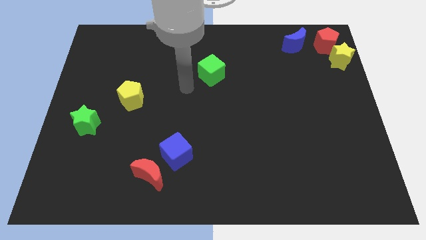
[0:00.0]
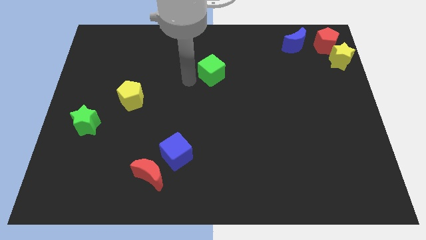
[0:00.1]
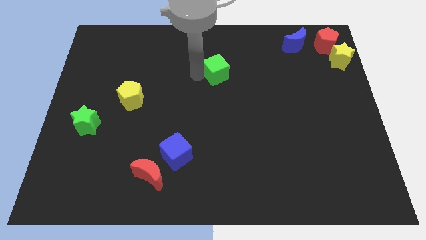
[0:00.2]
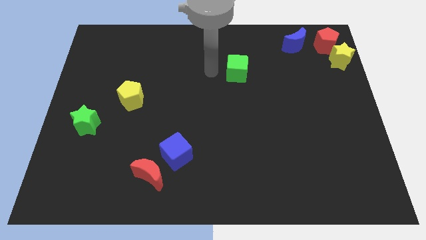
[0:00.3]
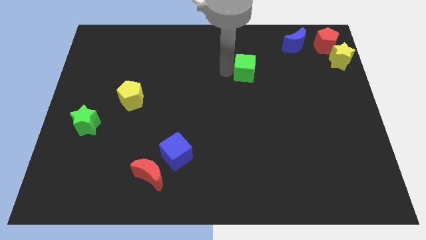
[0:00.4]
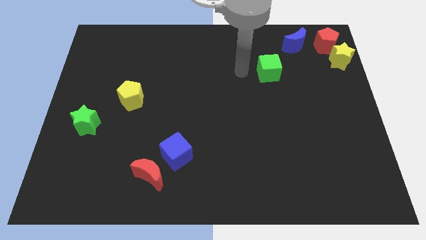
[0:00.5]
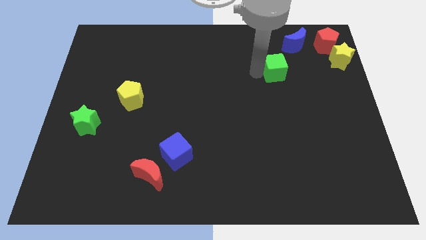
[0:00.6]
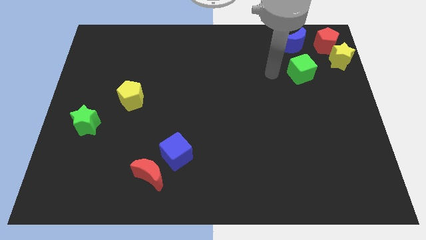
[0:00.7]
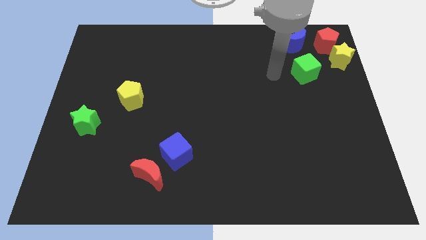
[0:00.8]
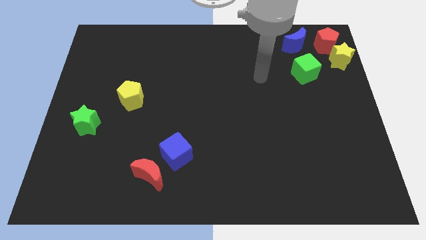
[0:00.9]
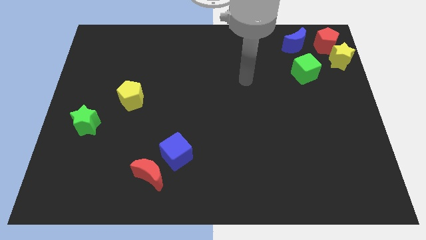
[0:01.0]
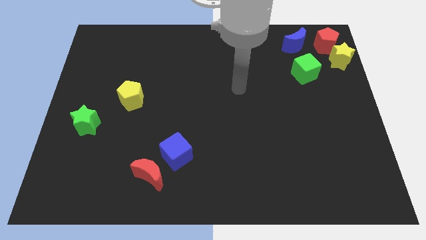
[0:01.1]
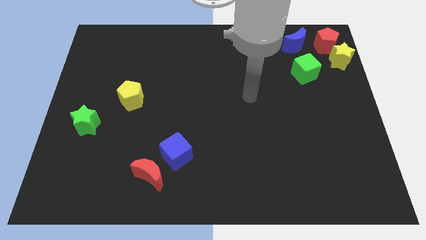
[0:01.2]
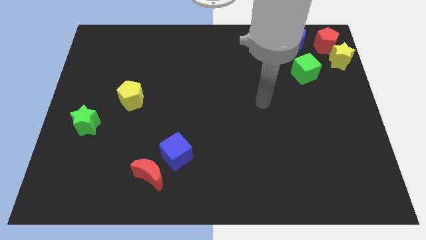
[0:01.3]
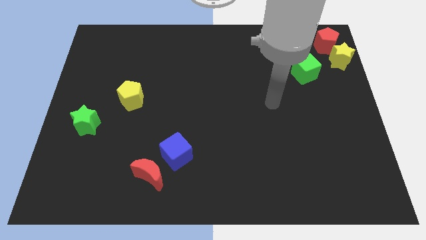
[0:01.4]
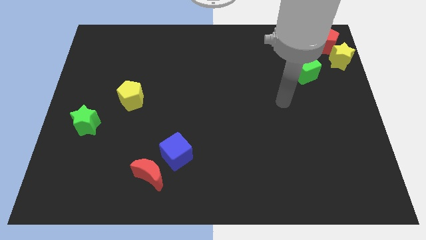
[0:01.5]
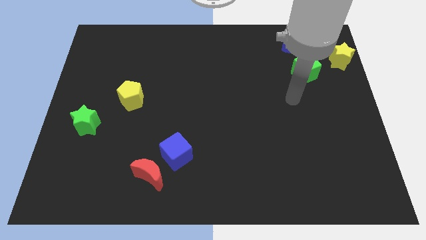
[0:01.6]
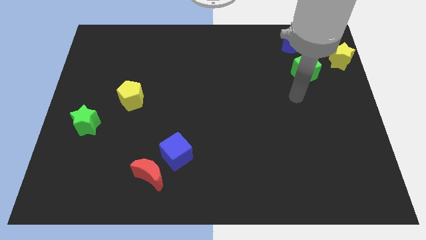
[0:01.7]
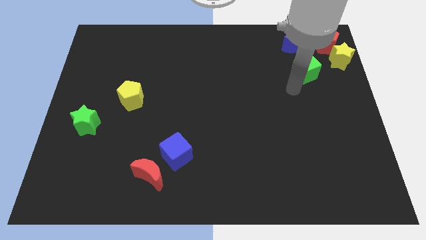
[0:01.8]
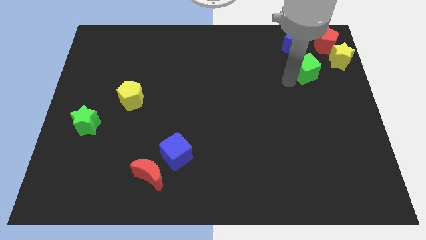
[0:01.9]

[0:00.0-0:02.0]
push the green cube towards the yellow star

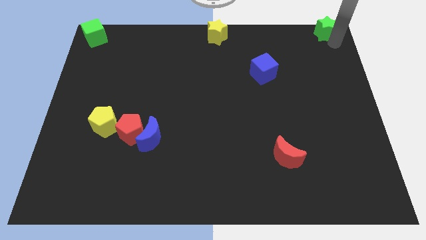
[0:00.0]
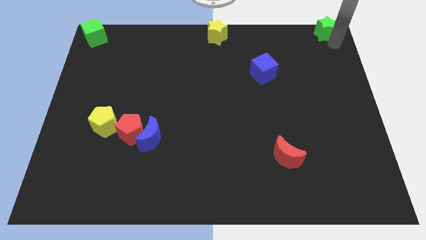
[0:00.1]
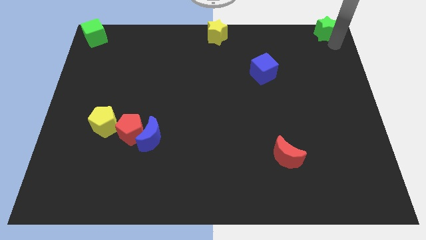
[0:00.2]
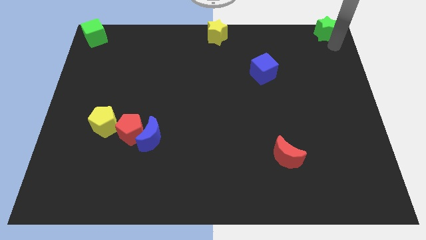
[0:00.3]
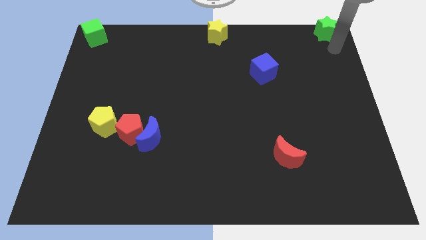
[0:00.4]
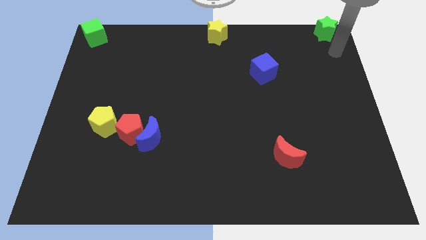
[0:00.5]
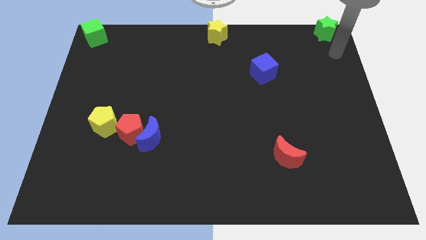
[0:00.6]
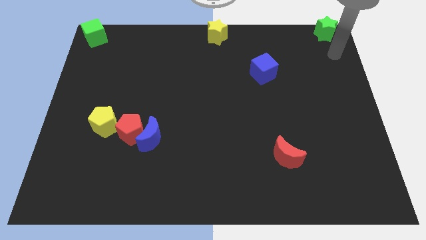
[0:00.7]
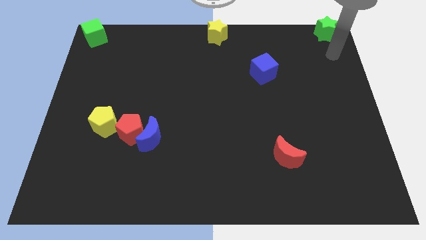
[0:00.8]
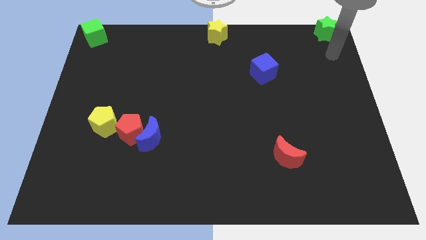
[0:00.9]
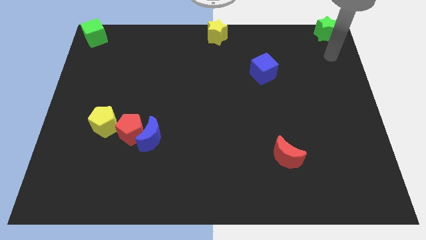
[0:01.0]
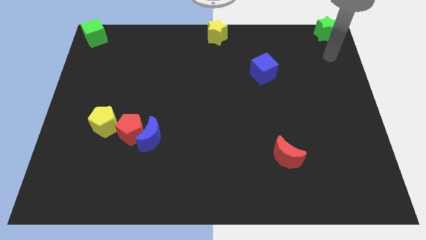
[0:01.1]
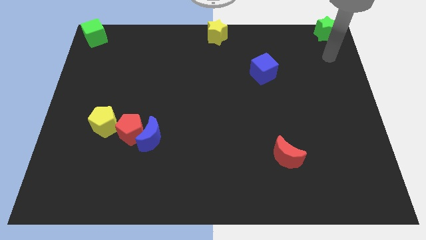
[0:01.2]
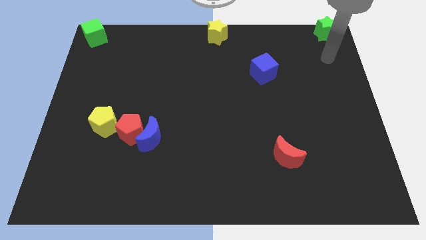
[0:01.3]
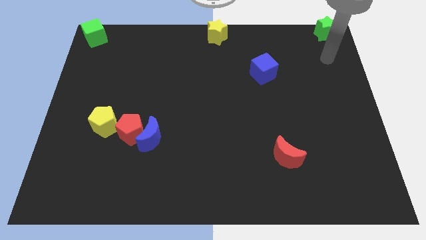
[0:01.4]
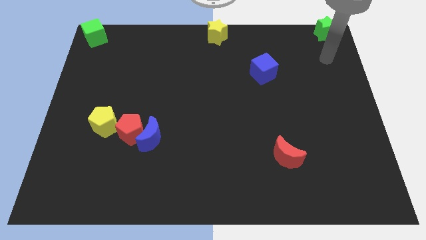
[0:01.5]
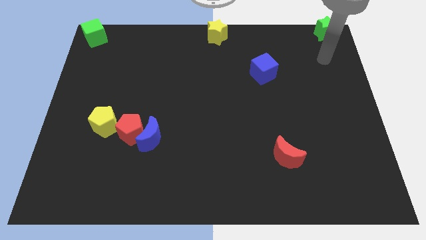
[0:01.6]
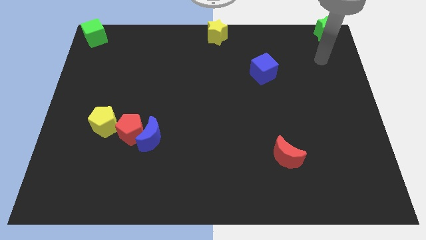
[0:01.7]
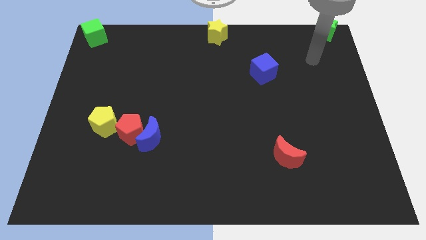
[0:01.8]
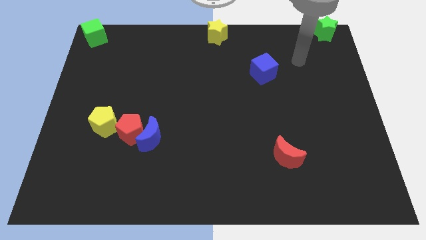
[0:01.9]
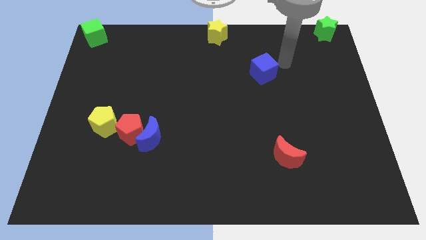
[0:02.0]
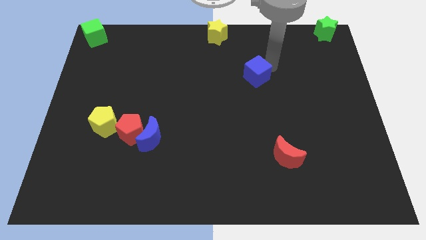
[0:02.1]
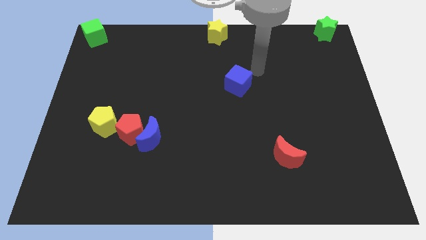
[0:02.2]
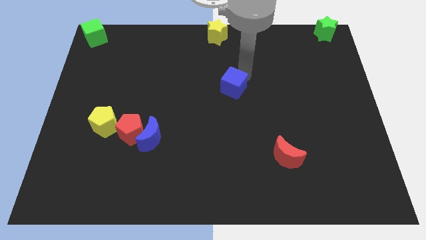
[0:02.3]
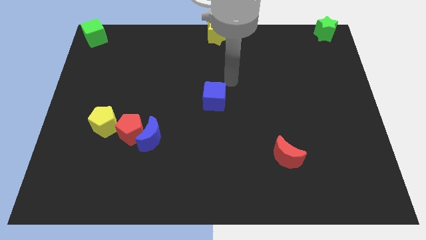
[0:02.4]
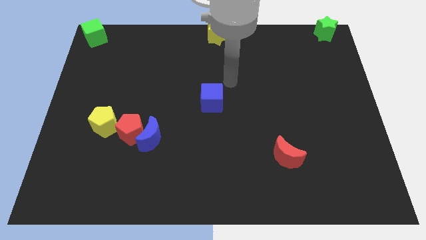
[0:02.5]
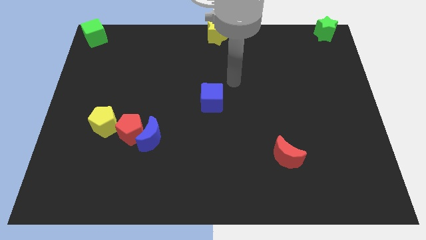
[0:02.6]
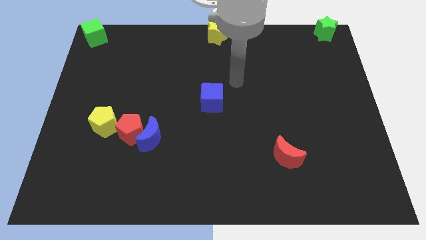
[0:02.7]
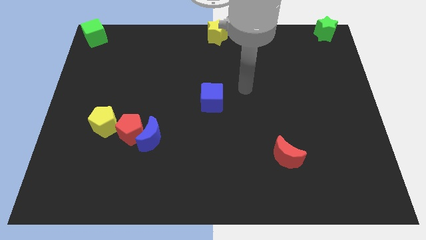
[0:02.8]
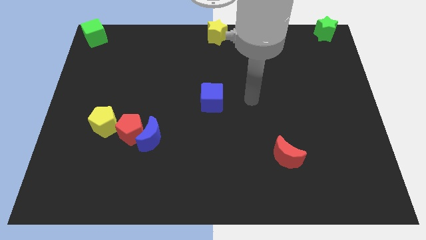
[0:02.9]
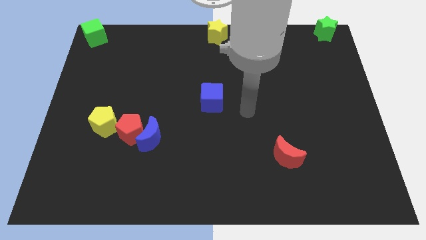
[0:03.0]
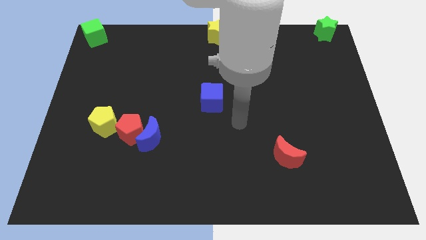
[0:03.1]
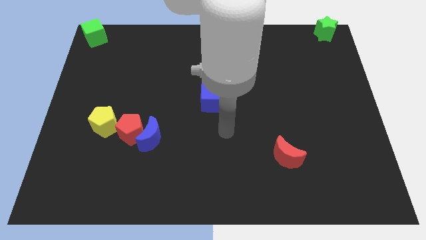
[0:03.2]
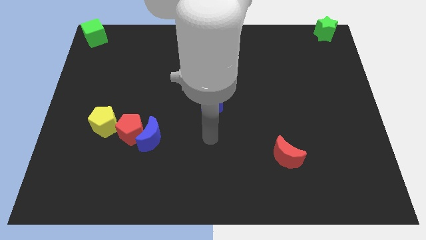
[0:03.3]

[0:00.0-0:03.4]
move the blue cube to the center of the board

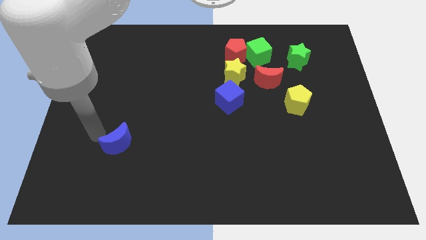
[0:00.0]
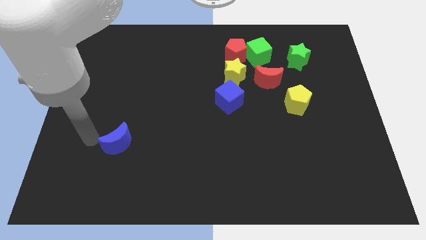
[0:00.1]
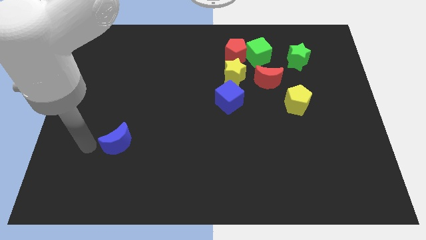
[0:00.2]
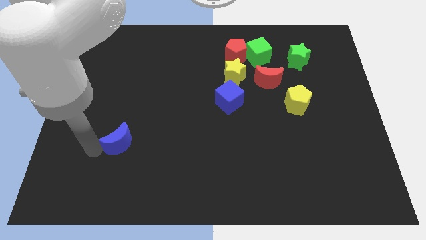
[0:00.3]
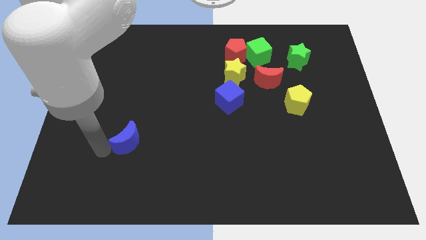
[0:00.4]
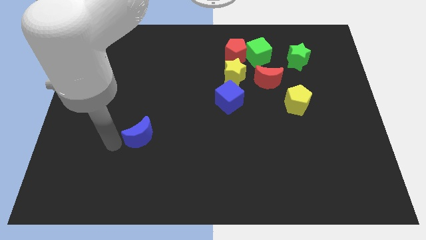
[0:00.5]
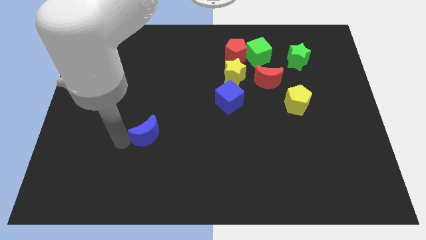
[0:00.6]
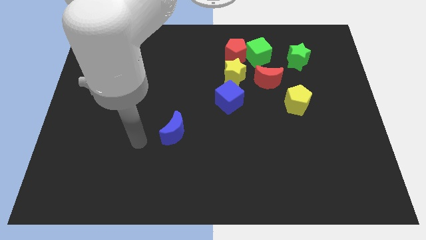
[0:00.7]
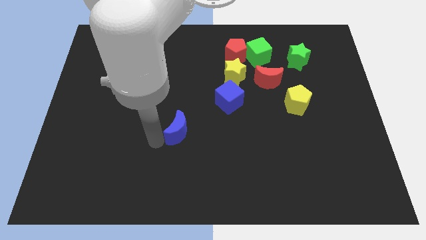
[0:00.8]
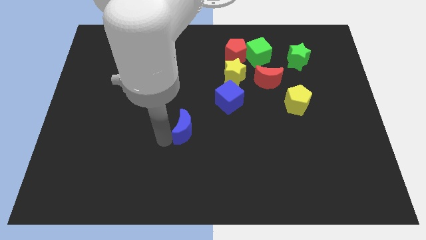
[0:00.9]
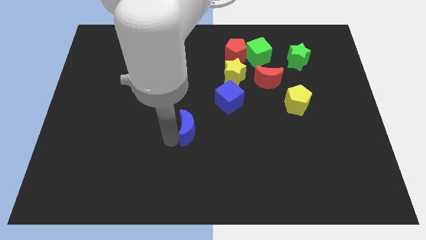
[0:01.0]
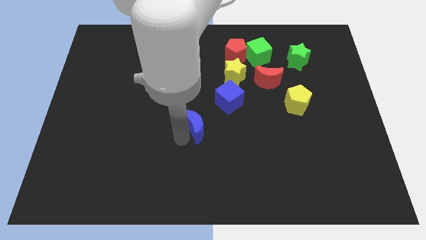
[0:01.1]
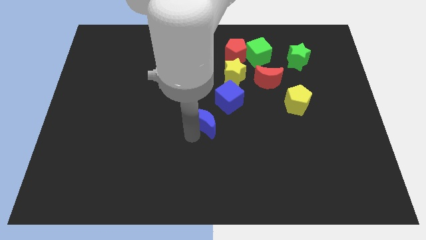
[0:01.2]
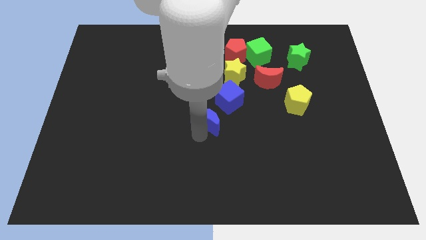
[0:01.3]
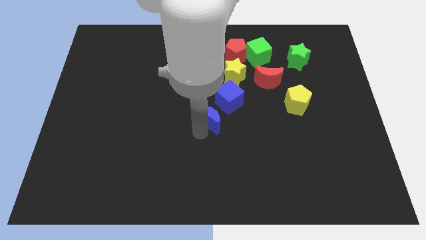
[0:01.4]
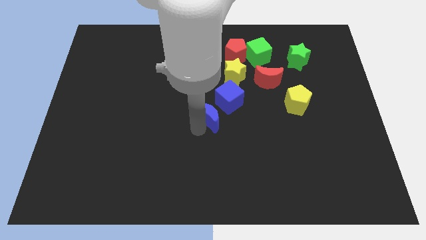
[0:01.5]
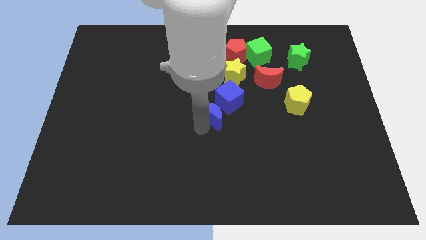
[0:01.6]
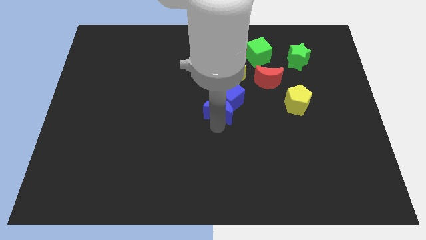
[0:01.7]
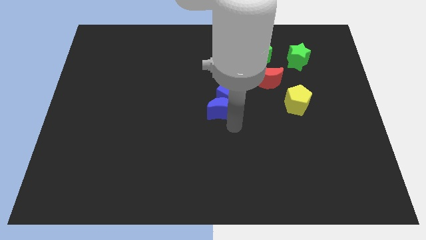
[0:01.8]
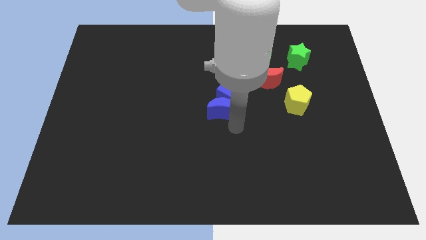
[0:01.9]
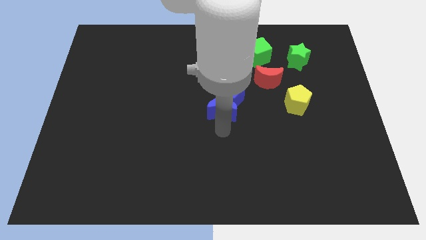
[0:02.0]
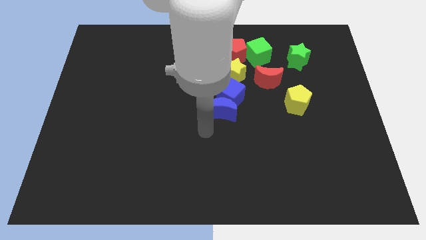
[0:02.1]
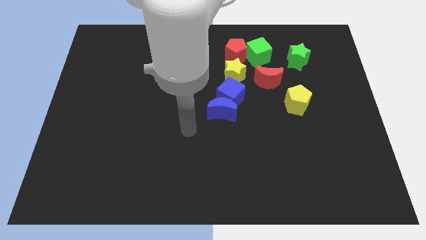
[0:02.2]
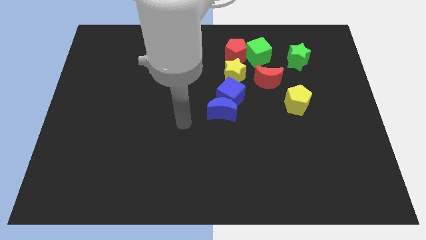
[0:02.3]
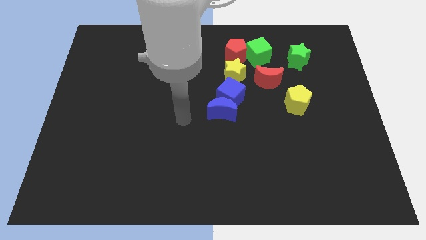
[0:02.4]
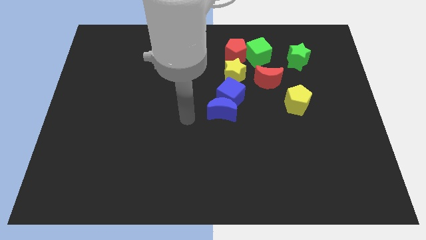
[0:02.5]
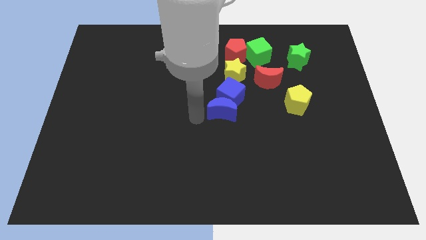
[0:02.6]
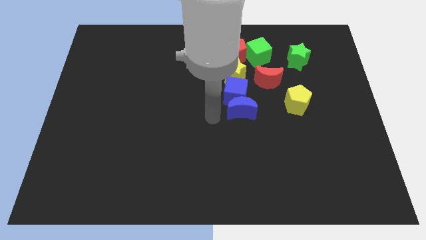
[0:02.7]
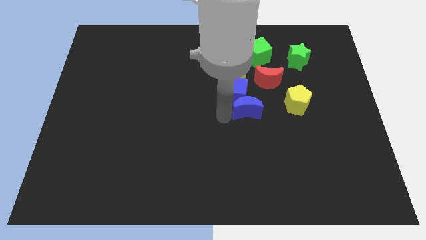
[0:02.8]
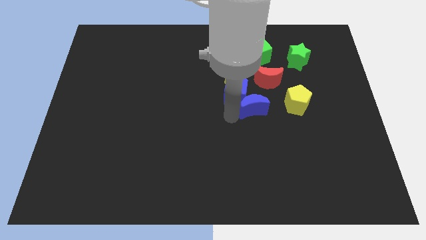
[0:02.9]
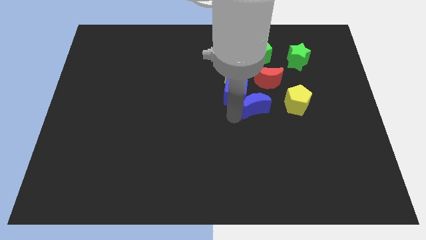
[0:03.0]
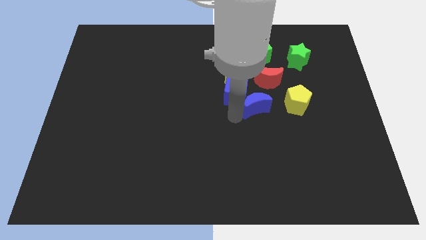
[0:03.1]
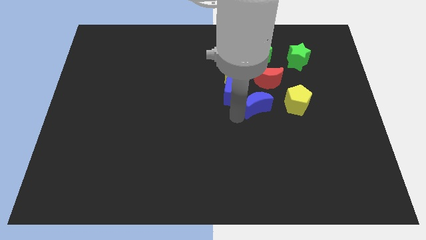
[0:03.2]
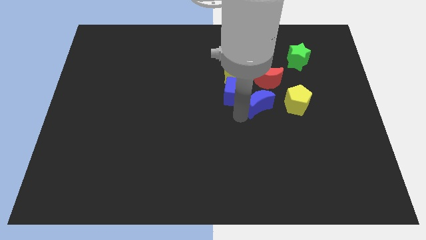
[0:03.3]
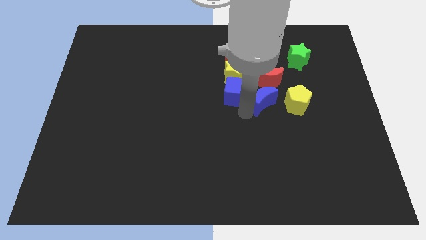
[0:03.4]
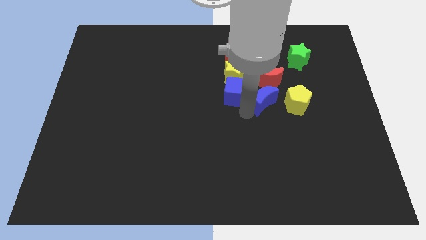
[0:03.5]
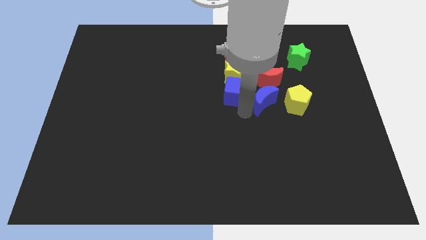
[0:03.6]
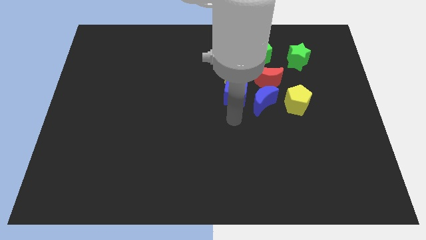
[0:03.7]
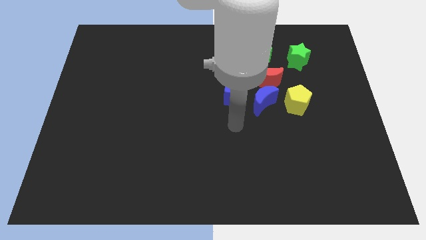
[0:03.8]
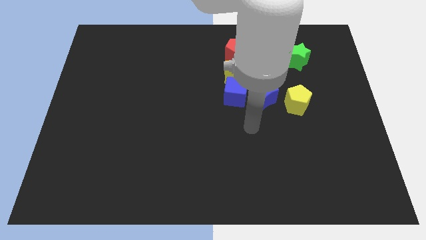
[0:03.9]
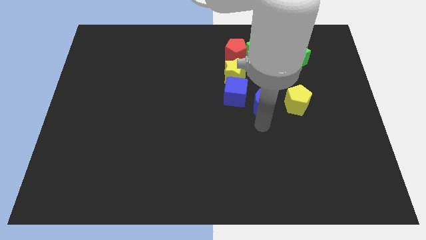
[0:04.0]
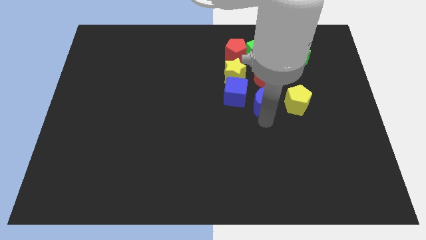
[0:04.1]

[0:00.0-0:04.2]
place the blue crescent below the red crescent
